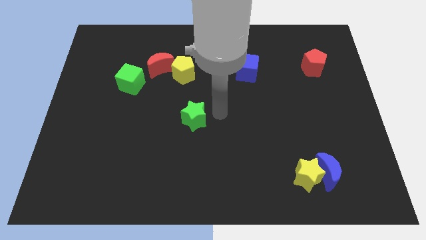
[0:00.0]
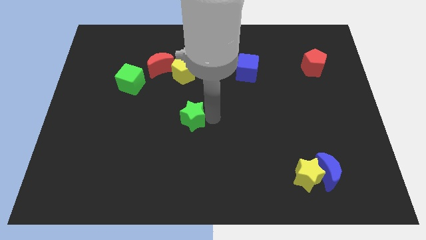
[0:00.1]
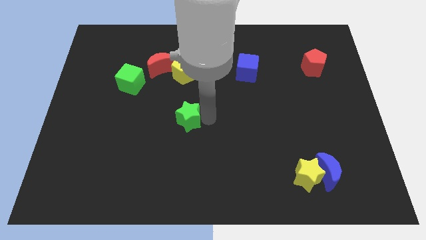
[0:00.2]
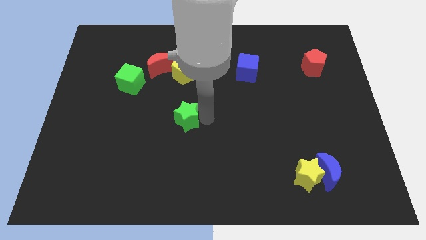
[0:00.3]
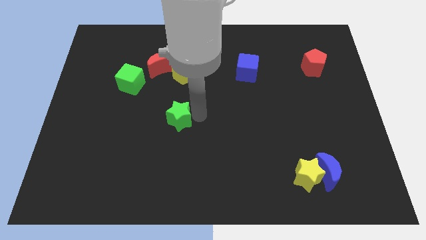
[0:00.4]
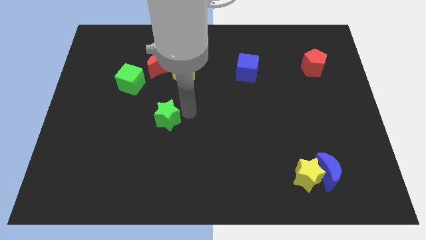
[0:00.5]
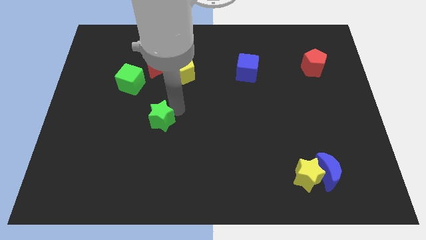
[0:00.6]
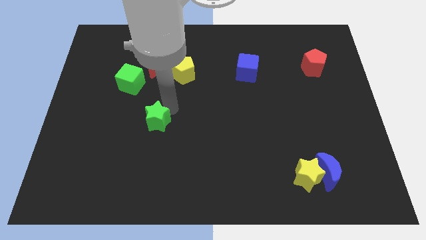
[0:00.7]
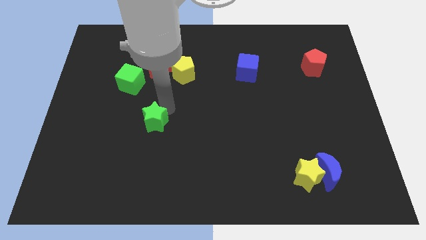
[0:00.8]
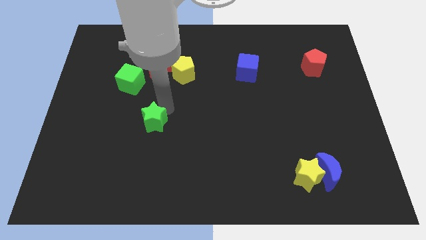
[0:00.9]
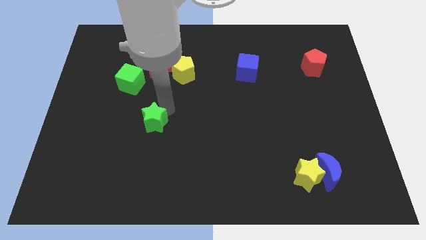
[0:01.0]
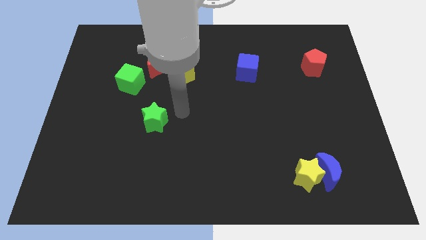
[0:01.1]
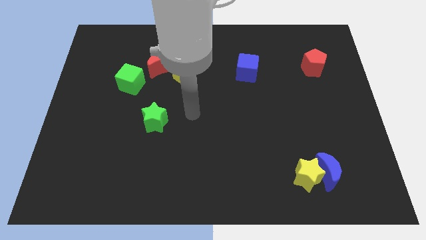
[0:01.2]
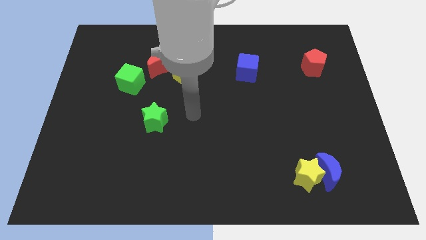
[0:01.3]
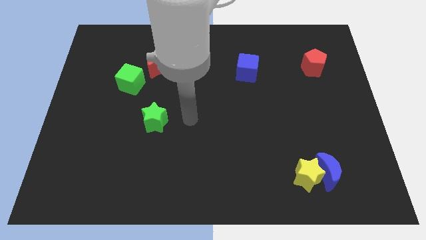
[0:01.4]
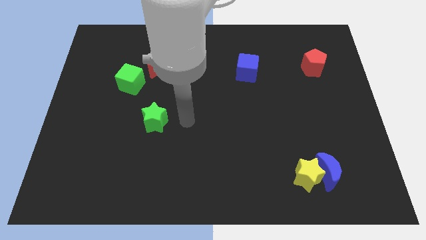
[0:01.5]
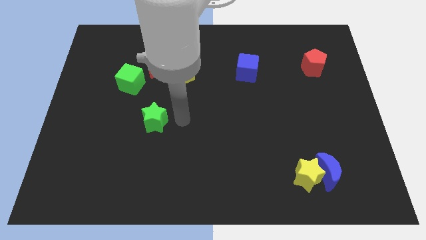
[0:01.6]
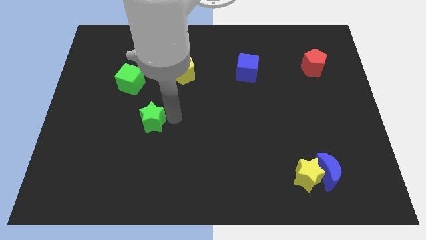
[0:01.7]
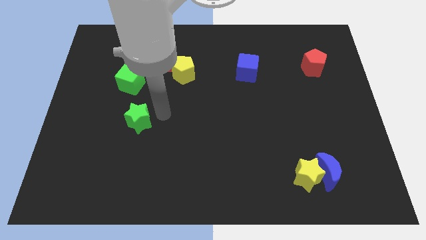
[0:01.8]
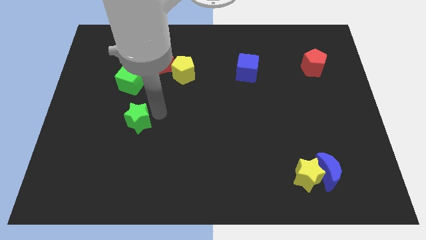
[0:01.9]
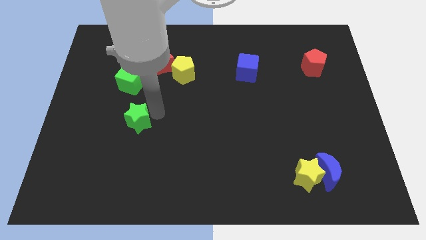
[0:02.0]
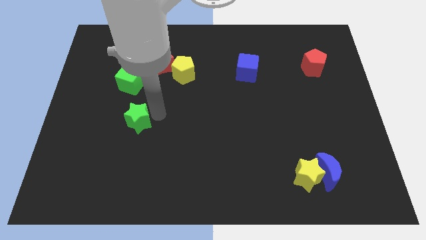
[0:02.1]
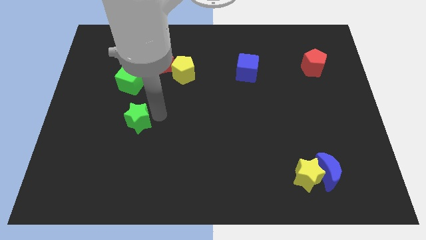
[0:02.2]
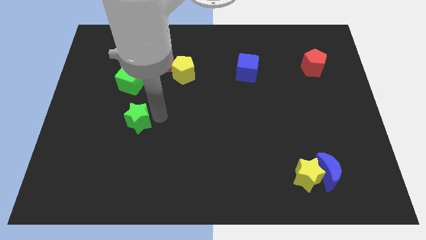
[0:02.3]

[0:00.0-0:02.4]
place the green star below the green cube

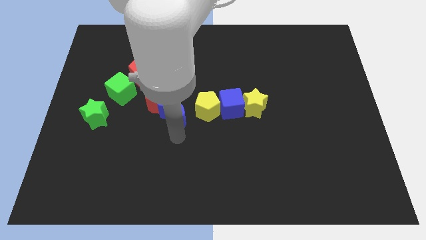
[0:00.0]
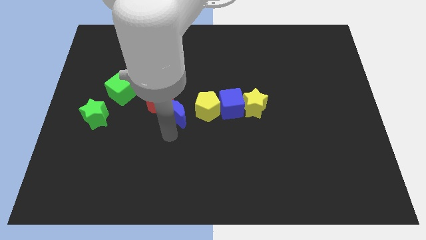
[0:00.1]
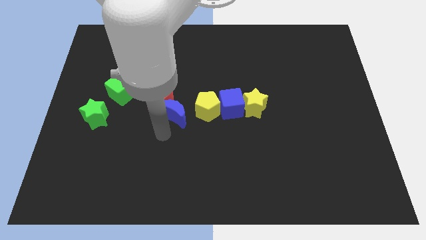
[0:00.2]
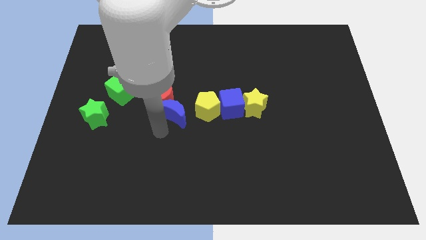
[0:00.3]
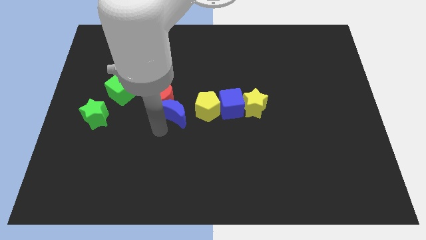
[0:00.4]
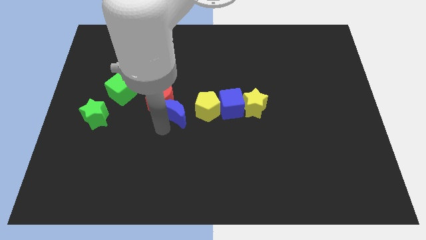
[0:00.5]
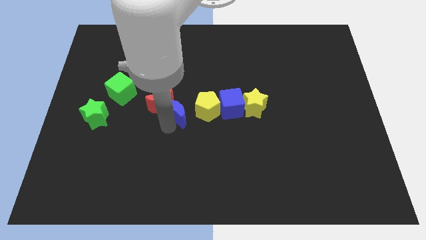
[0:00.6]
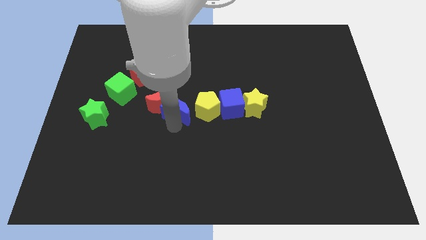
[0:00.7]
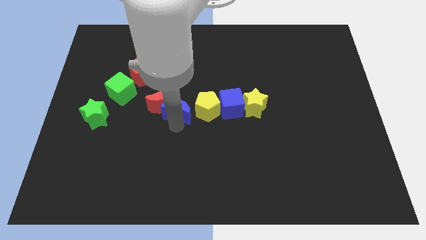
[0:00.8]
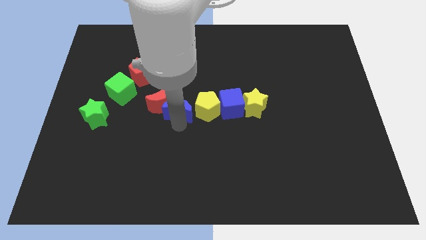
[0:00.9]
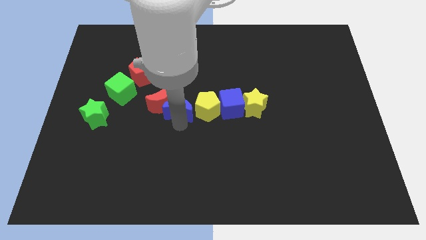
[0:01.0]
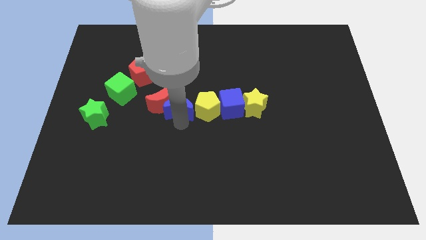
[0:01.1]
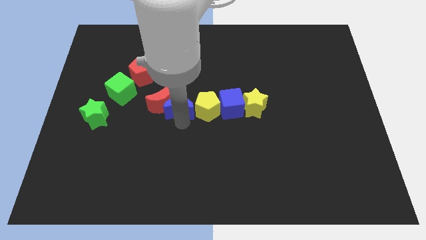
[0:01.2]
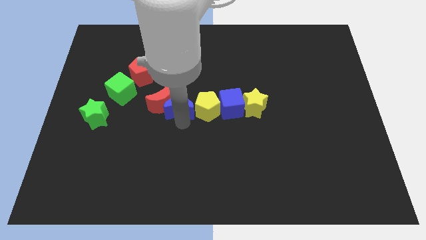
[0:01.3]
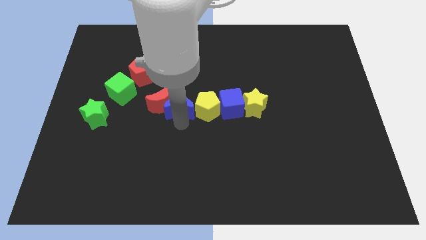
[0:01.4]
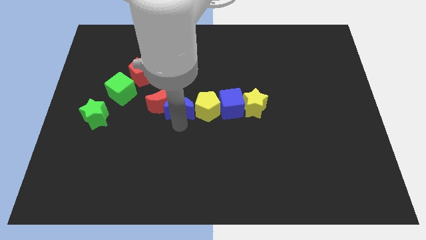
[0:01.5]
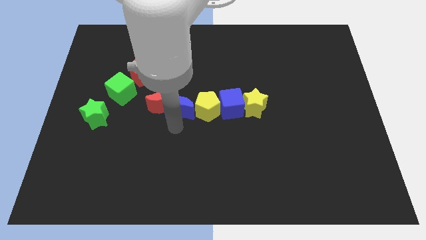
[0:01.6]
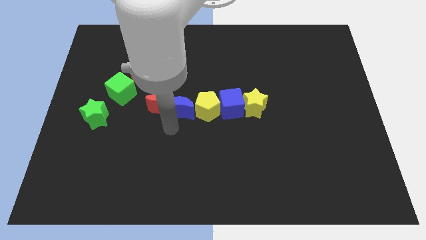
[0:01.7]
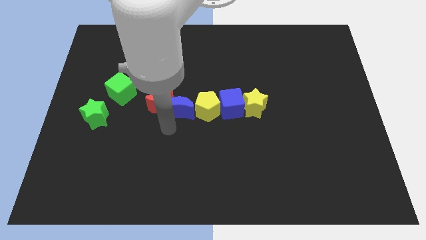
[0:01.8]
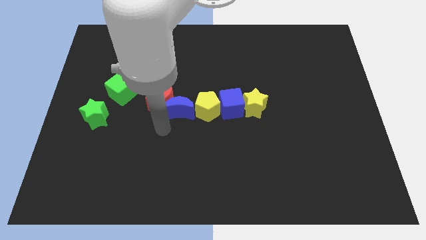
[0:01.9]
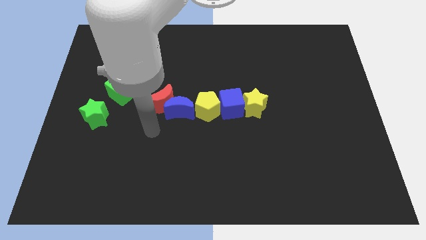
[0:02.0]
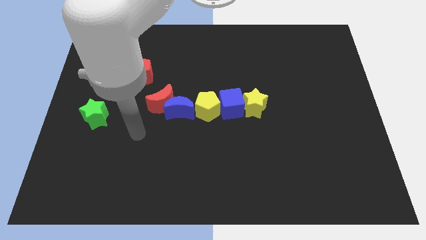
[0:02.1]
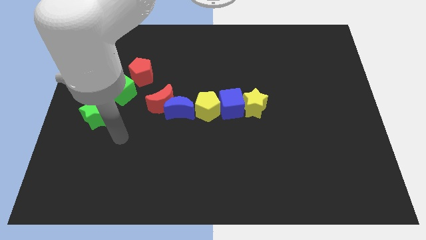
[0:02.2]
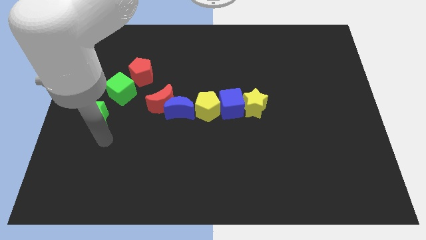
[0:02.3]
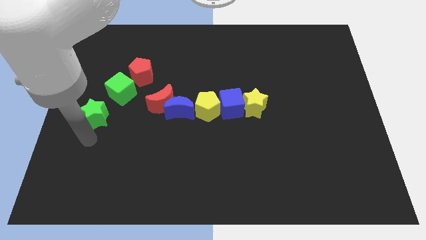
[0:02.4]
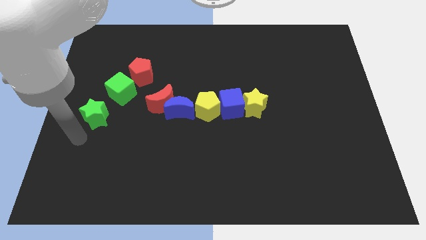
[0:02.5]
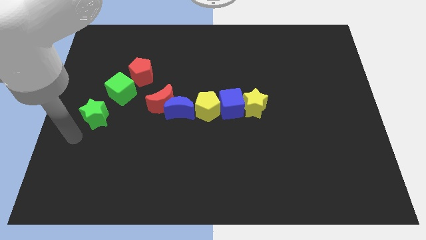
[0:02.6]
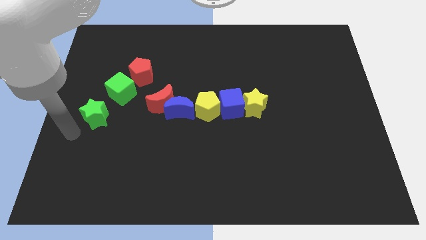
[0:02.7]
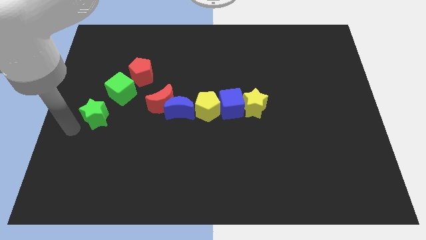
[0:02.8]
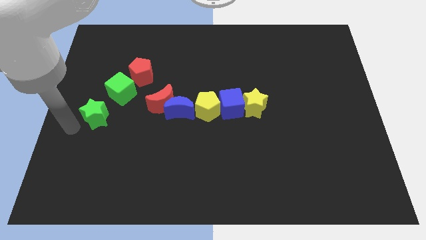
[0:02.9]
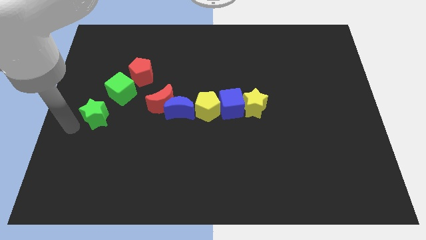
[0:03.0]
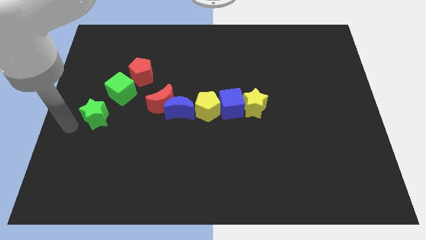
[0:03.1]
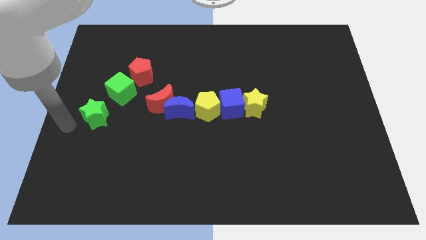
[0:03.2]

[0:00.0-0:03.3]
place blue crescent right to the red crescent

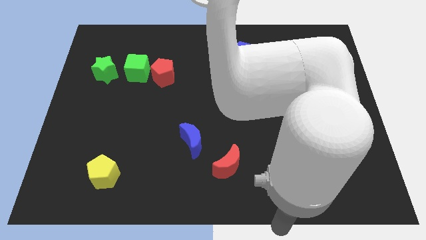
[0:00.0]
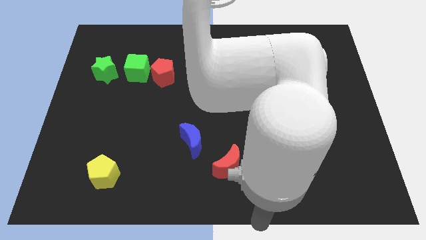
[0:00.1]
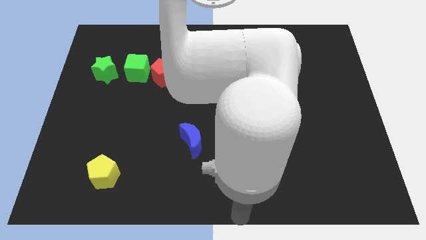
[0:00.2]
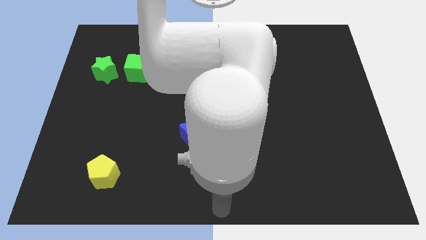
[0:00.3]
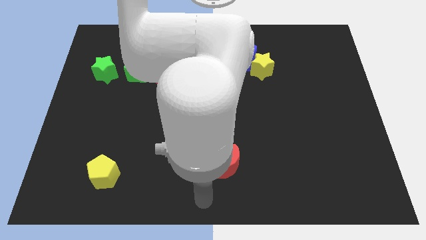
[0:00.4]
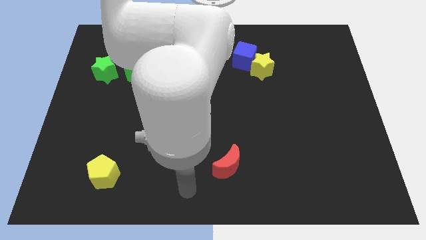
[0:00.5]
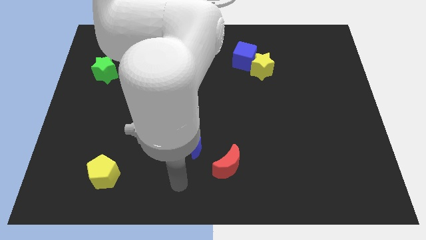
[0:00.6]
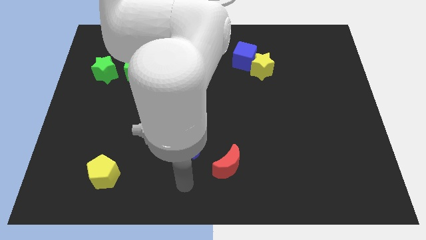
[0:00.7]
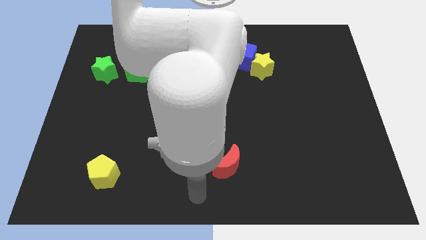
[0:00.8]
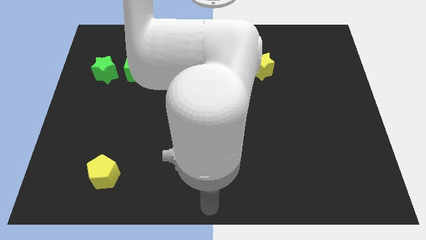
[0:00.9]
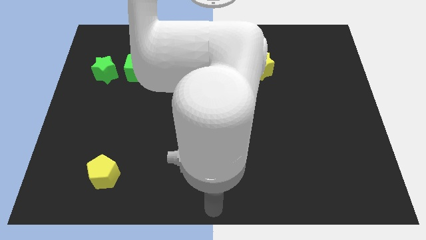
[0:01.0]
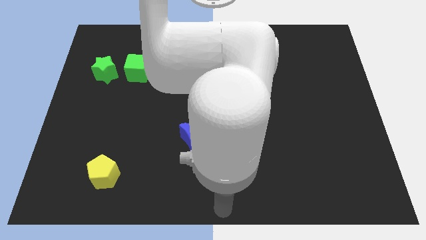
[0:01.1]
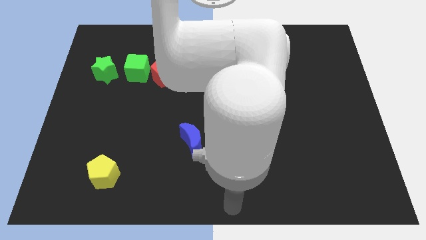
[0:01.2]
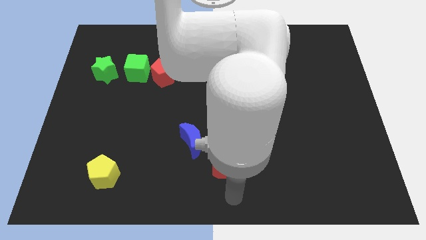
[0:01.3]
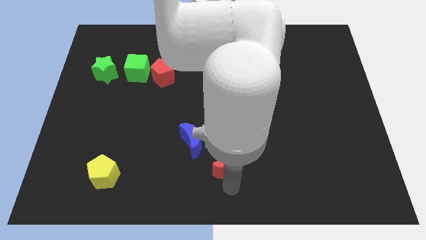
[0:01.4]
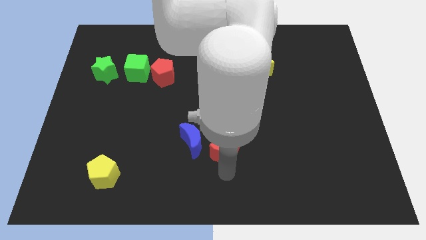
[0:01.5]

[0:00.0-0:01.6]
point your arm below red moon

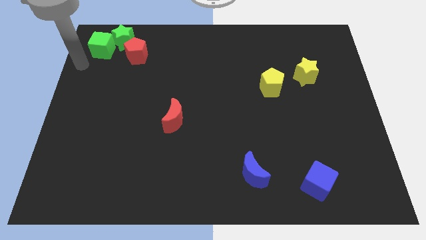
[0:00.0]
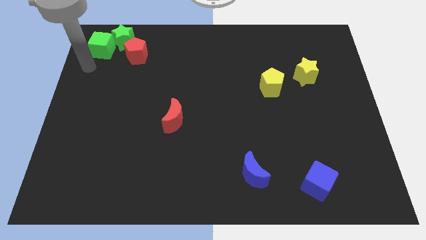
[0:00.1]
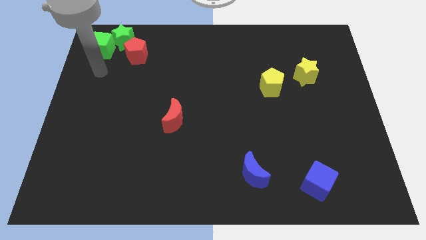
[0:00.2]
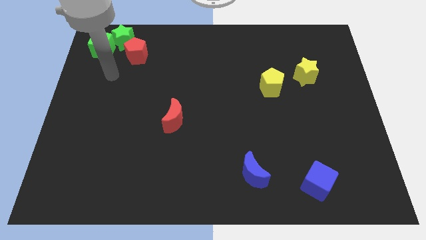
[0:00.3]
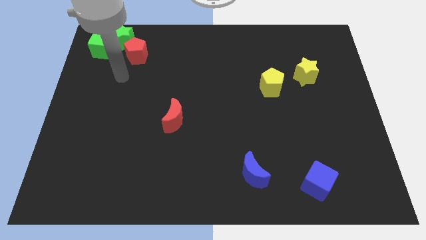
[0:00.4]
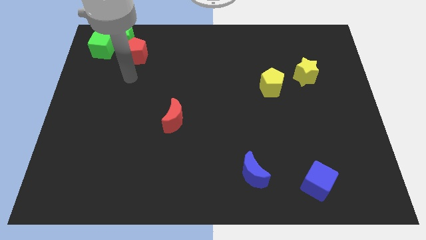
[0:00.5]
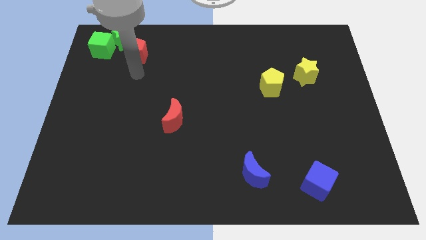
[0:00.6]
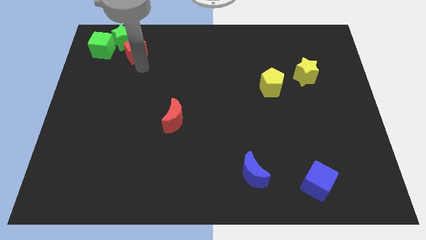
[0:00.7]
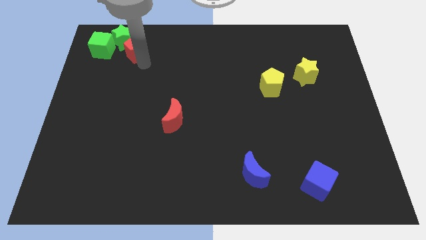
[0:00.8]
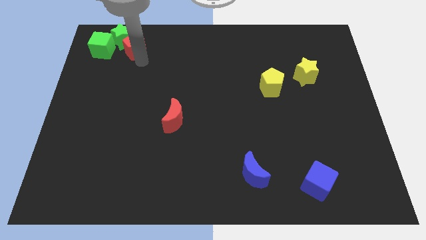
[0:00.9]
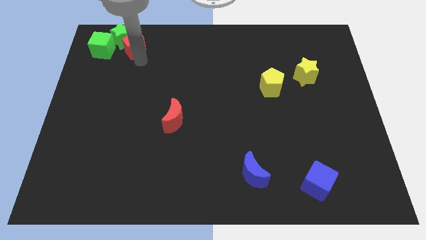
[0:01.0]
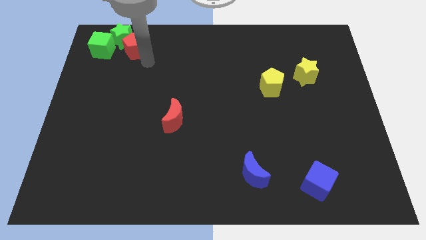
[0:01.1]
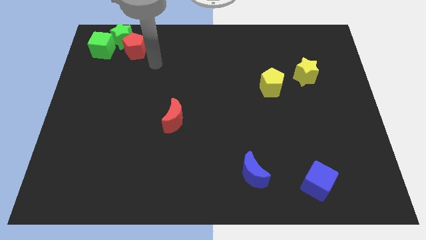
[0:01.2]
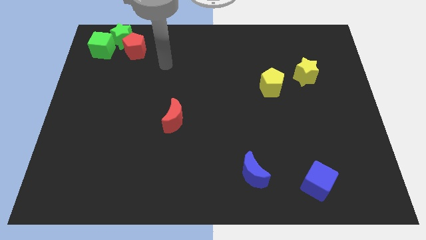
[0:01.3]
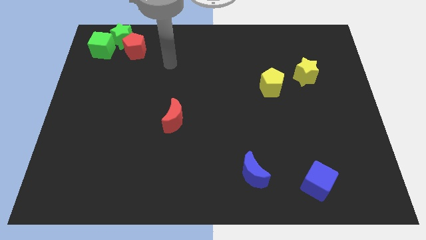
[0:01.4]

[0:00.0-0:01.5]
push the red pentagon into the green star
